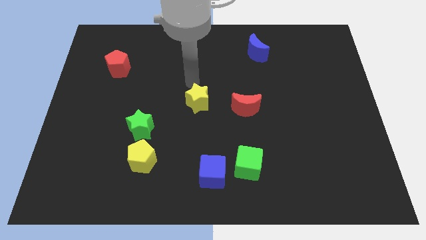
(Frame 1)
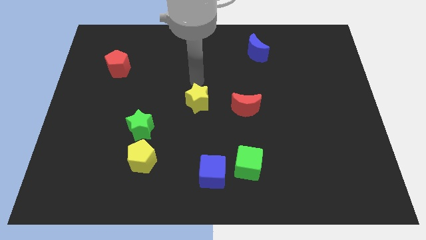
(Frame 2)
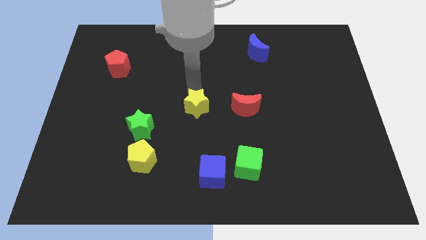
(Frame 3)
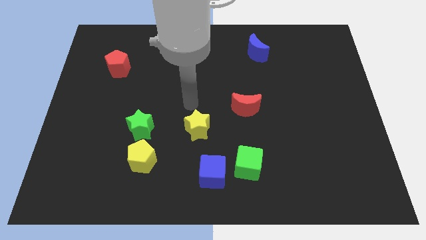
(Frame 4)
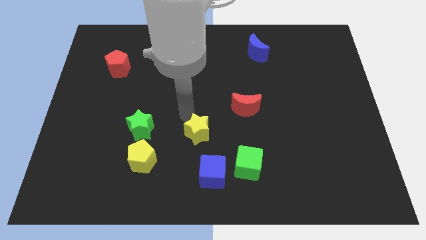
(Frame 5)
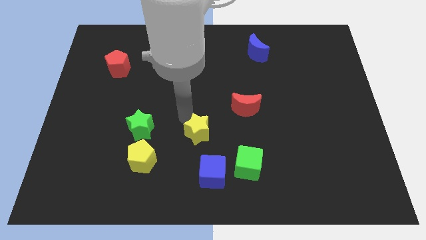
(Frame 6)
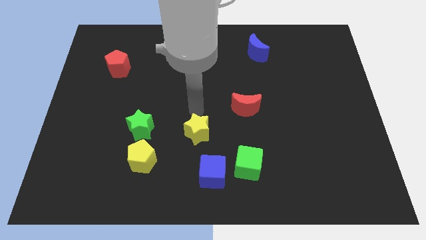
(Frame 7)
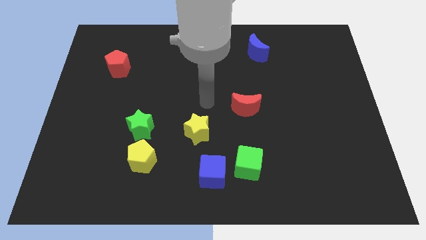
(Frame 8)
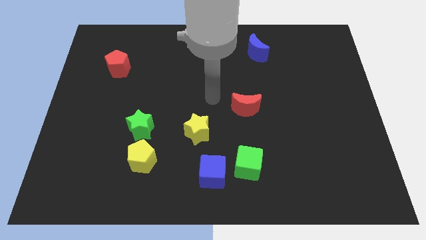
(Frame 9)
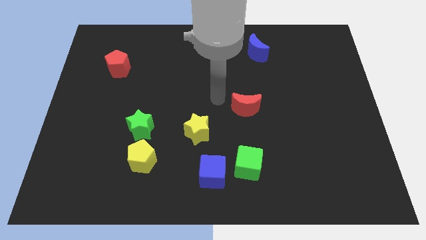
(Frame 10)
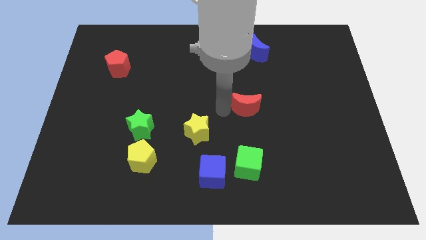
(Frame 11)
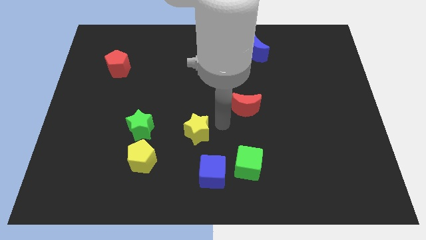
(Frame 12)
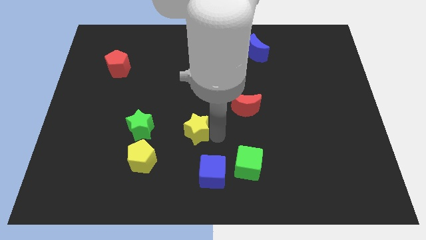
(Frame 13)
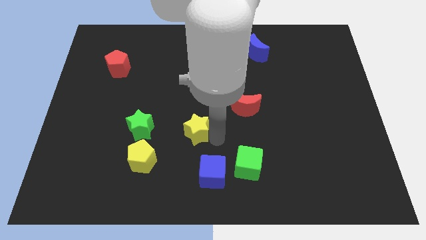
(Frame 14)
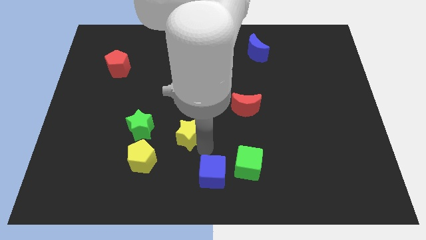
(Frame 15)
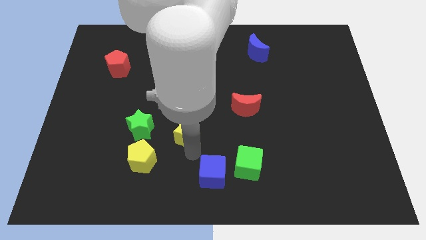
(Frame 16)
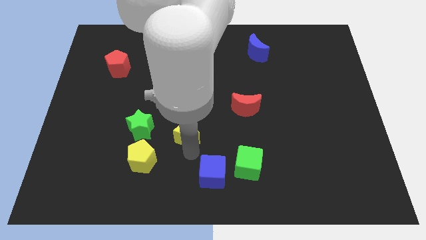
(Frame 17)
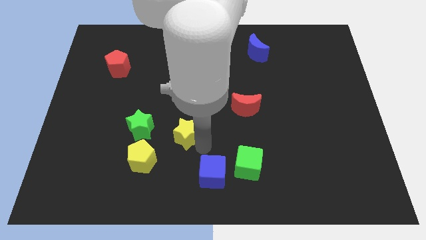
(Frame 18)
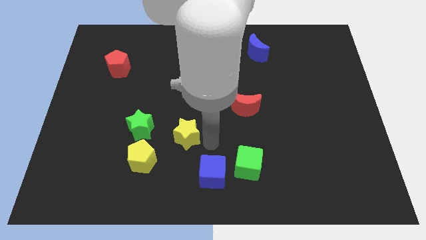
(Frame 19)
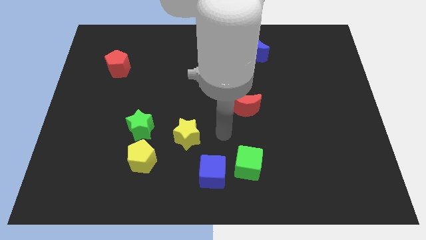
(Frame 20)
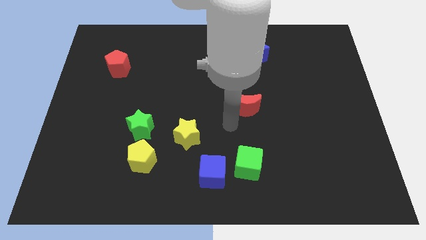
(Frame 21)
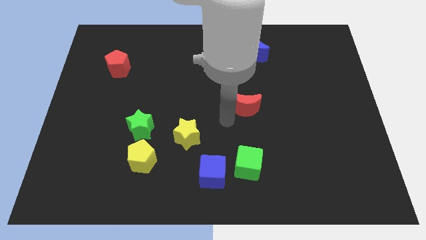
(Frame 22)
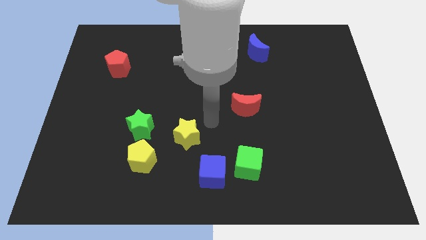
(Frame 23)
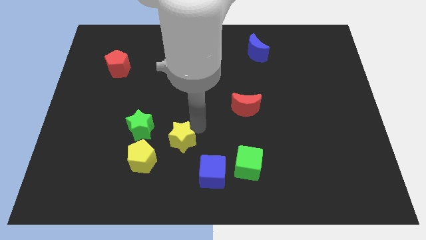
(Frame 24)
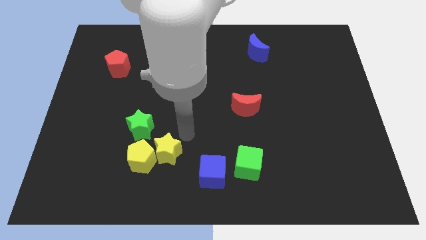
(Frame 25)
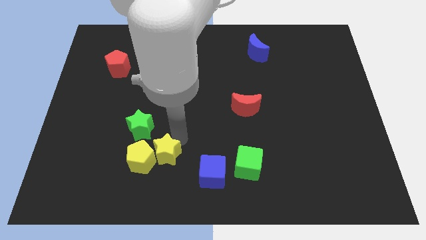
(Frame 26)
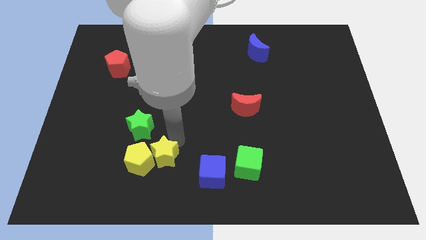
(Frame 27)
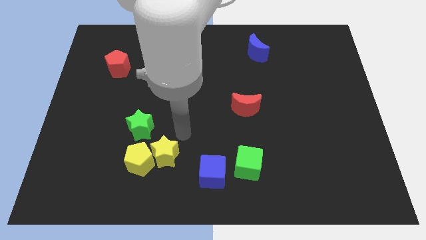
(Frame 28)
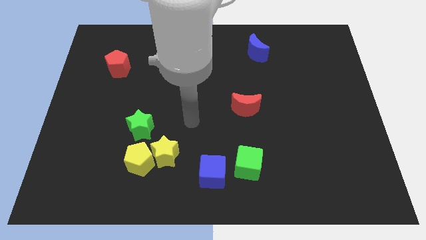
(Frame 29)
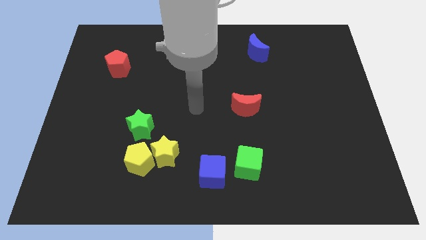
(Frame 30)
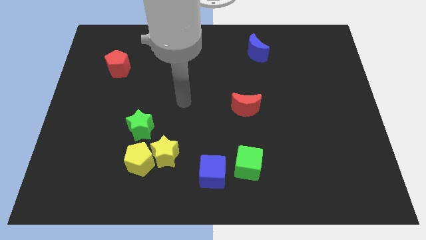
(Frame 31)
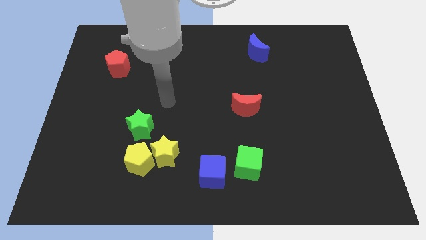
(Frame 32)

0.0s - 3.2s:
push the yellow star into the yellow pentagon

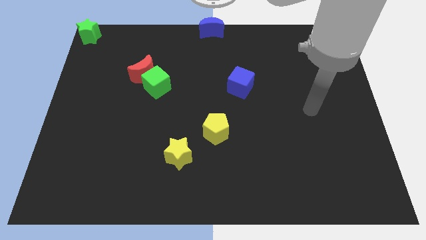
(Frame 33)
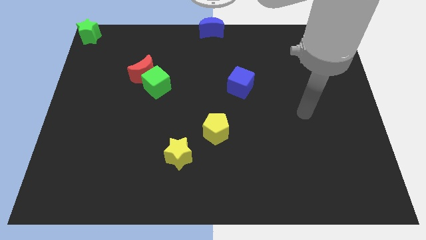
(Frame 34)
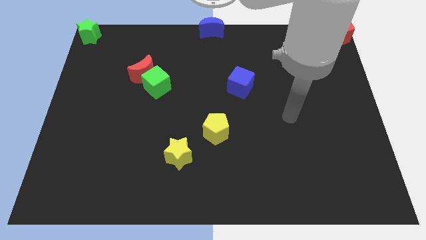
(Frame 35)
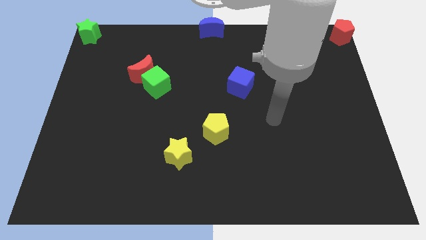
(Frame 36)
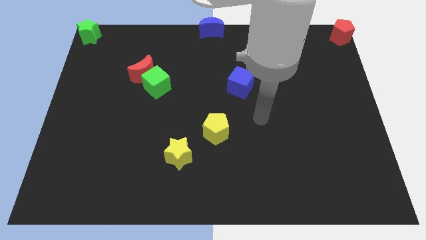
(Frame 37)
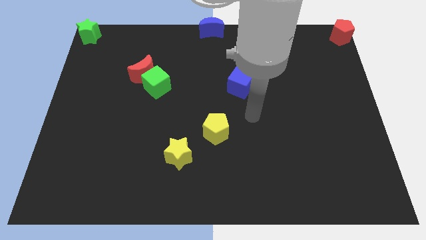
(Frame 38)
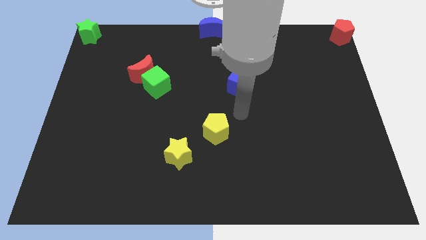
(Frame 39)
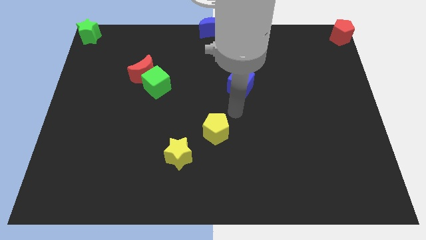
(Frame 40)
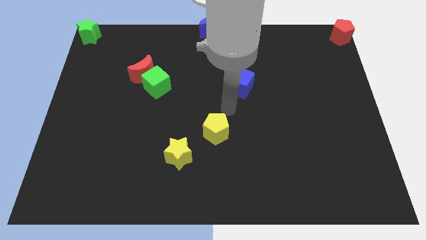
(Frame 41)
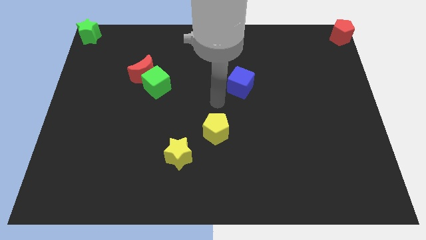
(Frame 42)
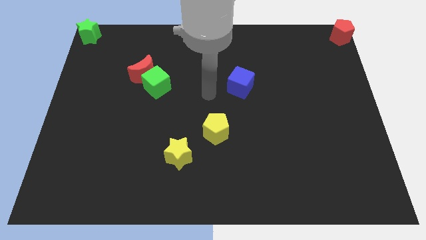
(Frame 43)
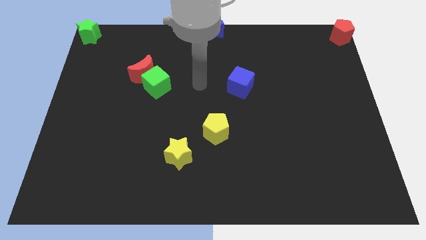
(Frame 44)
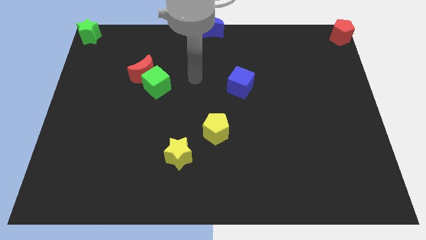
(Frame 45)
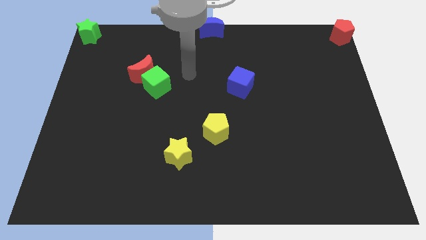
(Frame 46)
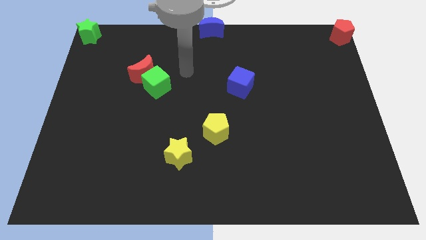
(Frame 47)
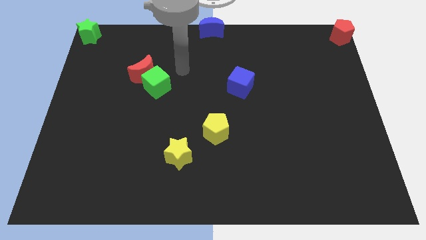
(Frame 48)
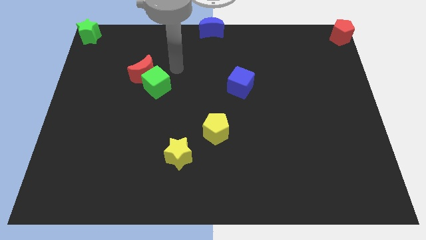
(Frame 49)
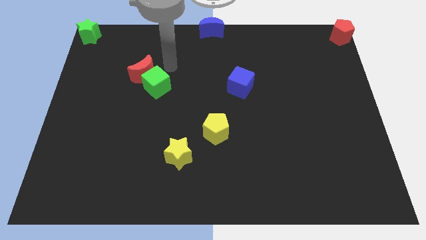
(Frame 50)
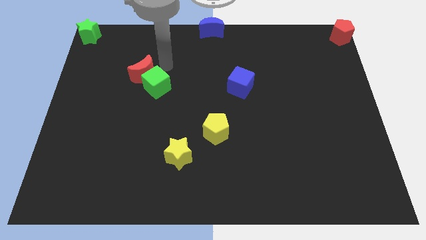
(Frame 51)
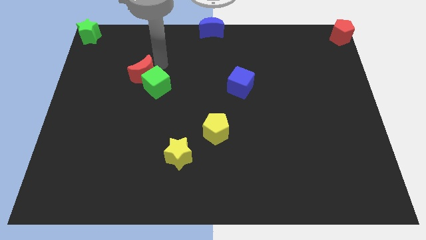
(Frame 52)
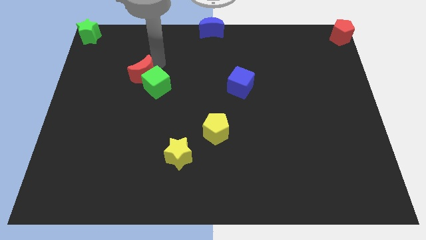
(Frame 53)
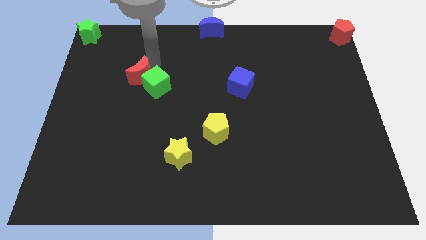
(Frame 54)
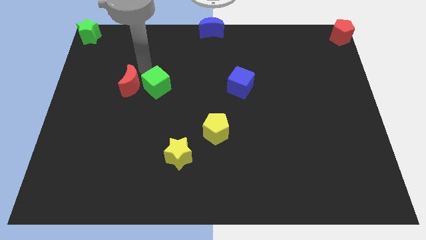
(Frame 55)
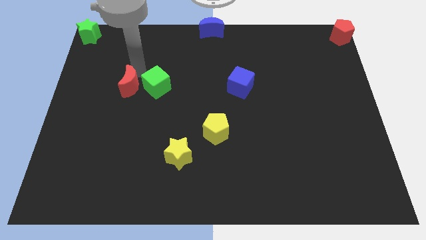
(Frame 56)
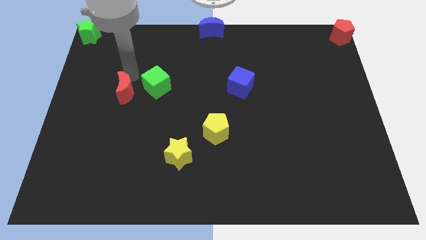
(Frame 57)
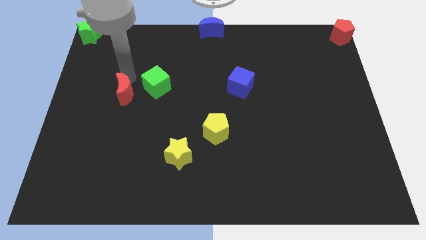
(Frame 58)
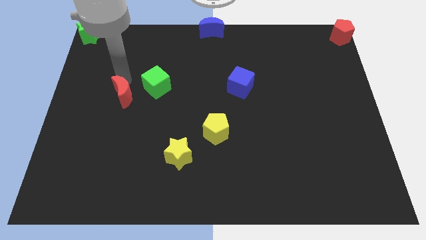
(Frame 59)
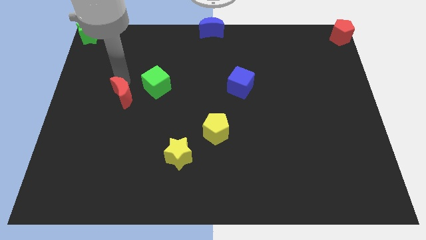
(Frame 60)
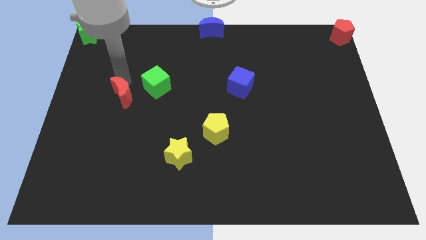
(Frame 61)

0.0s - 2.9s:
separate the red crescent and green cube

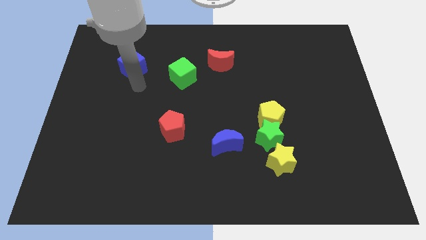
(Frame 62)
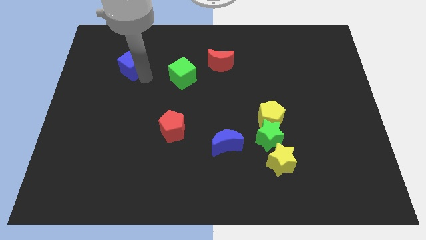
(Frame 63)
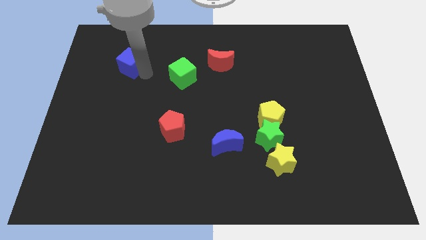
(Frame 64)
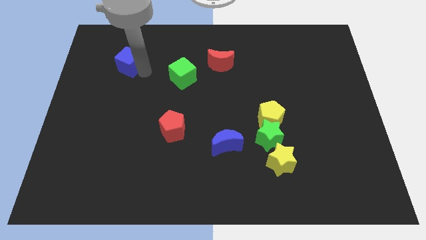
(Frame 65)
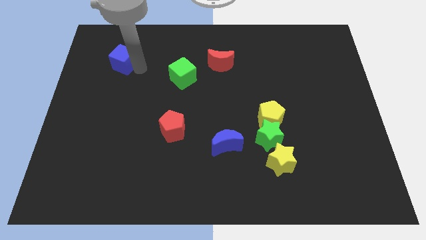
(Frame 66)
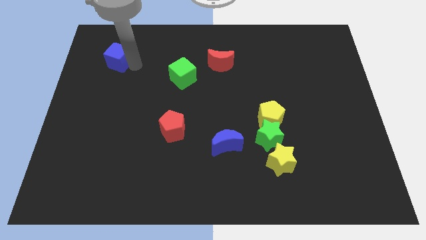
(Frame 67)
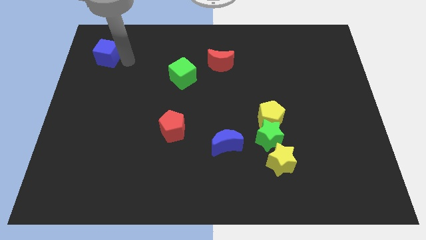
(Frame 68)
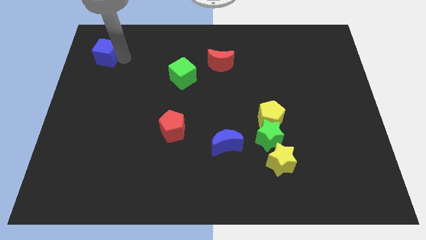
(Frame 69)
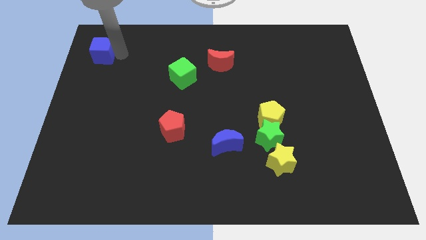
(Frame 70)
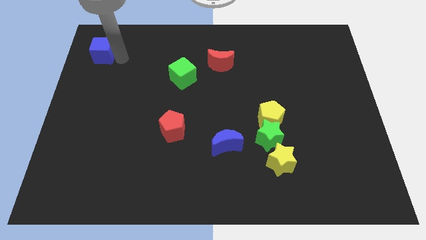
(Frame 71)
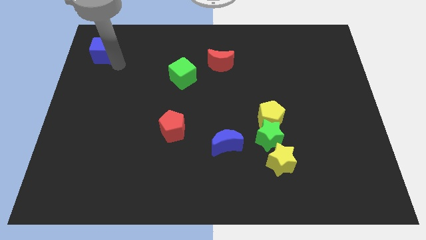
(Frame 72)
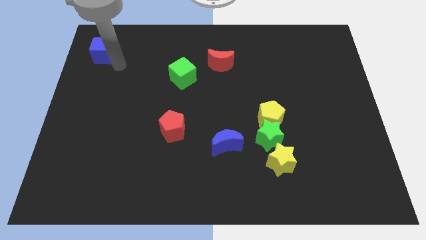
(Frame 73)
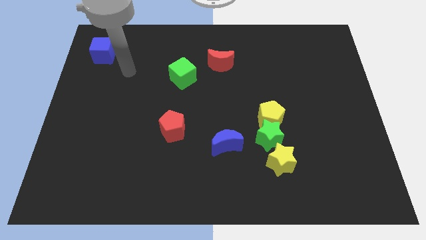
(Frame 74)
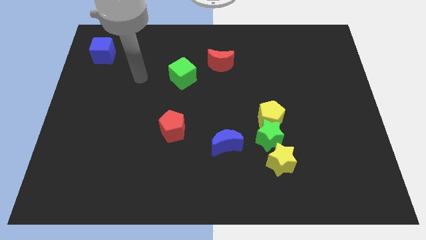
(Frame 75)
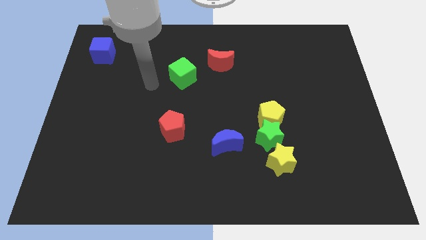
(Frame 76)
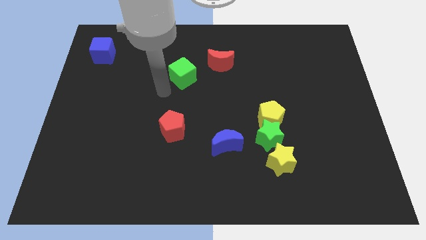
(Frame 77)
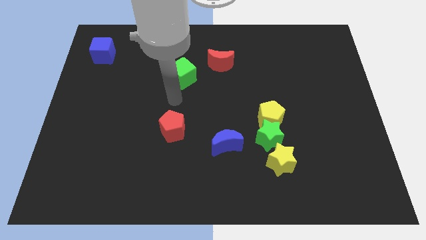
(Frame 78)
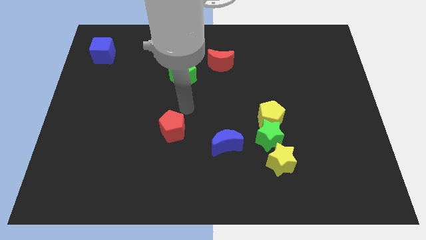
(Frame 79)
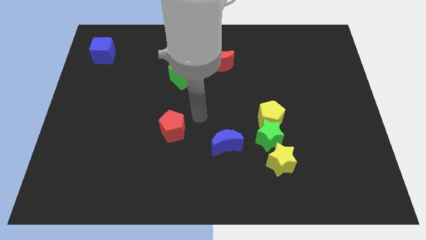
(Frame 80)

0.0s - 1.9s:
place the blue cube to the top left

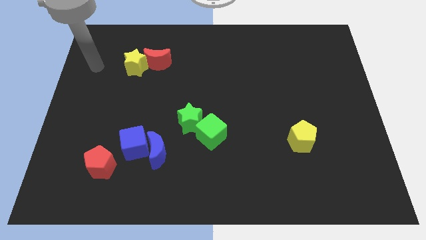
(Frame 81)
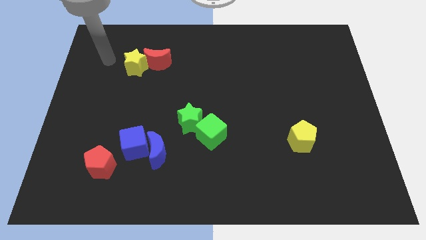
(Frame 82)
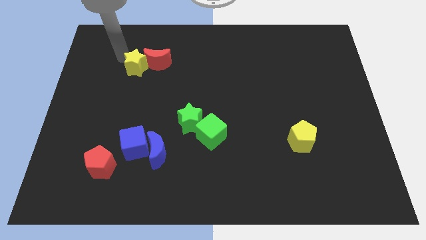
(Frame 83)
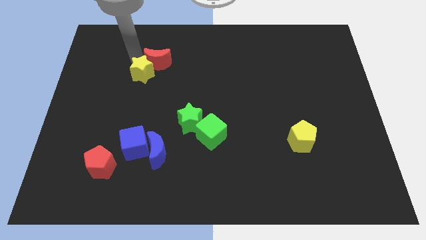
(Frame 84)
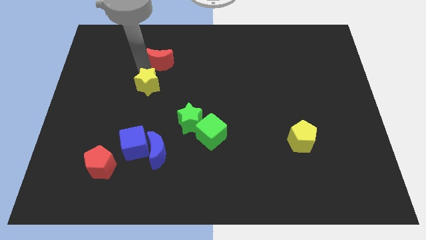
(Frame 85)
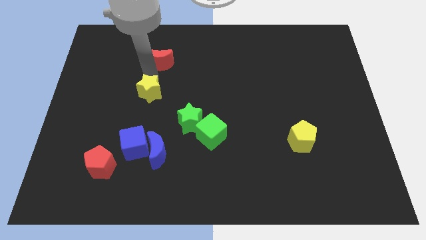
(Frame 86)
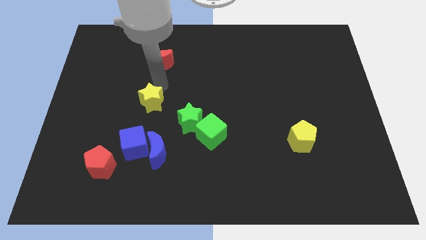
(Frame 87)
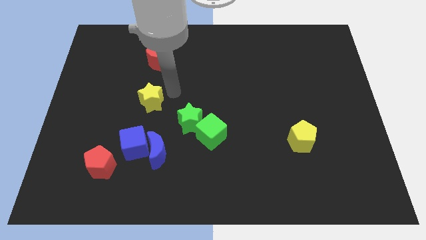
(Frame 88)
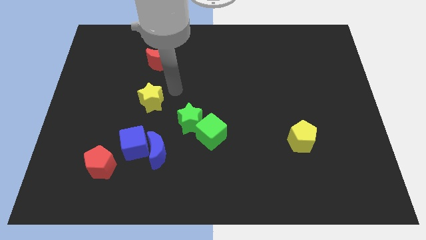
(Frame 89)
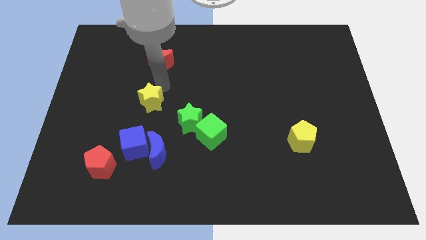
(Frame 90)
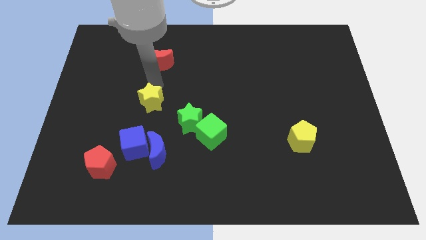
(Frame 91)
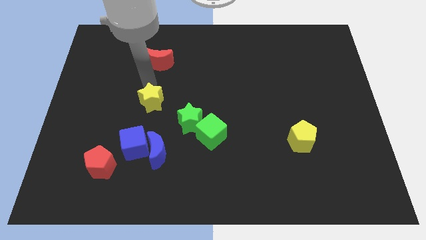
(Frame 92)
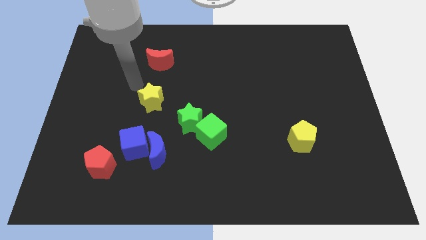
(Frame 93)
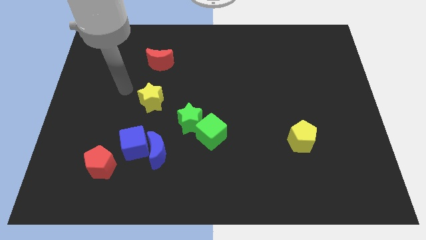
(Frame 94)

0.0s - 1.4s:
place the yellow star in between the red moon and blue cube
